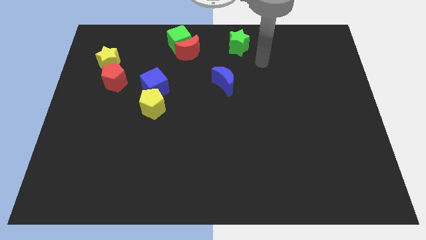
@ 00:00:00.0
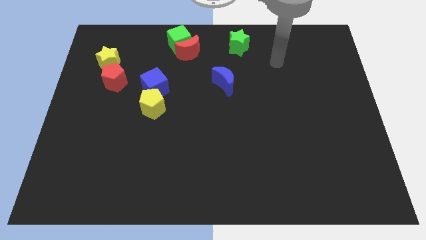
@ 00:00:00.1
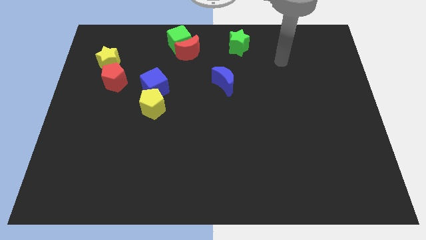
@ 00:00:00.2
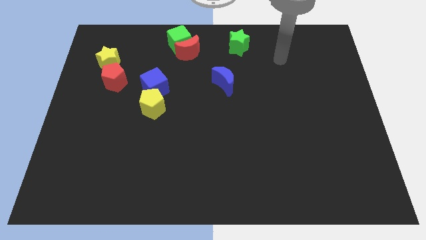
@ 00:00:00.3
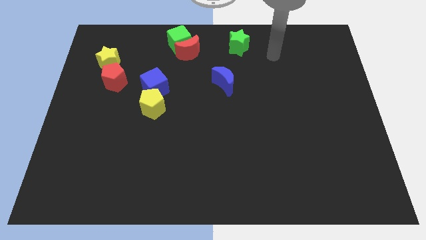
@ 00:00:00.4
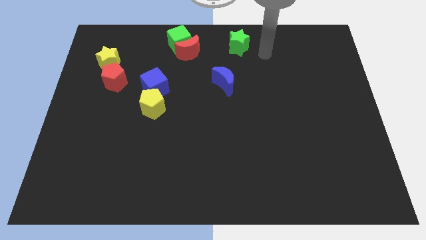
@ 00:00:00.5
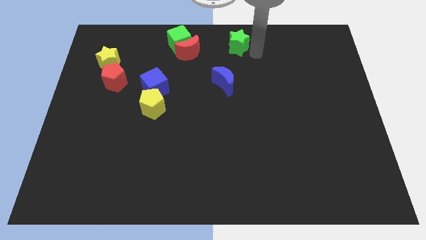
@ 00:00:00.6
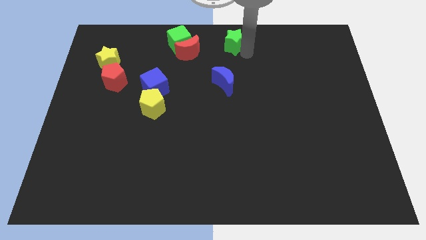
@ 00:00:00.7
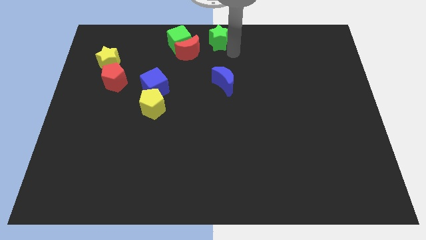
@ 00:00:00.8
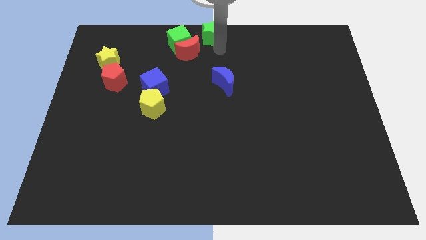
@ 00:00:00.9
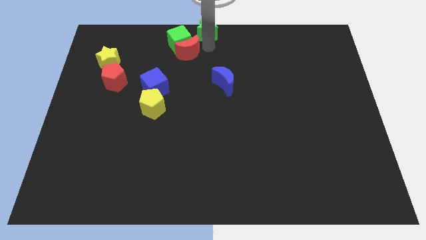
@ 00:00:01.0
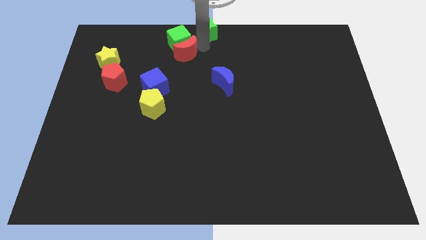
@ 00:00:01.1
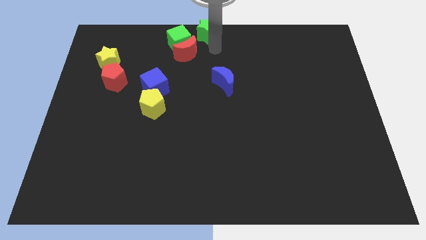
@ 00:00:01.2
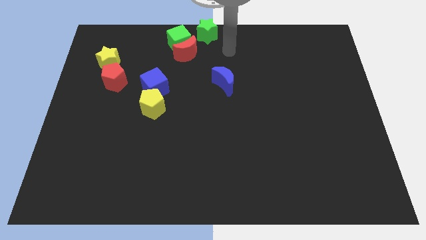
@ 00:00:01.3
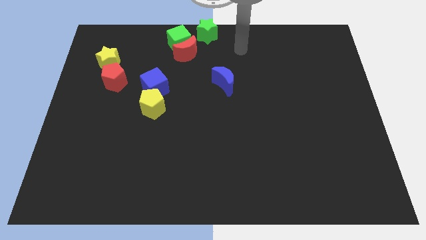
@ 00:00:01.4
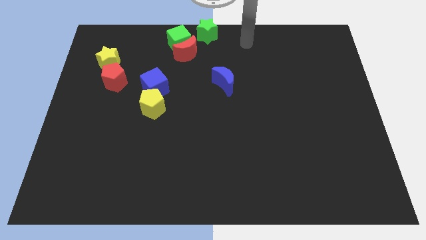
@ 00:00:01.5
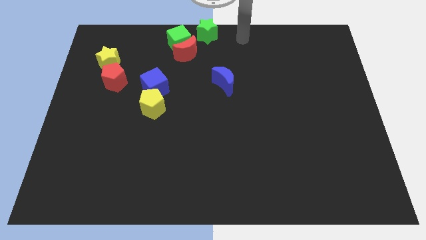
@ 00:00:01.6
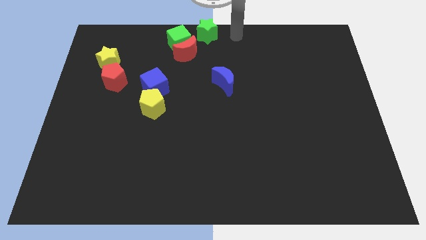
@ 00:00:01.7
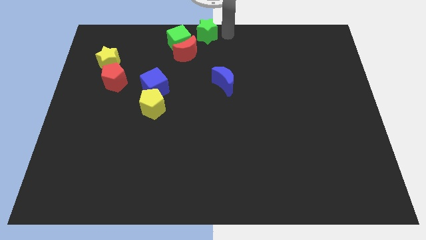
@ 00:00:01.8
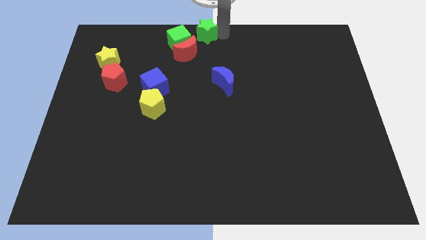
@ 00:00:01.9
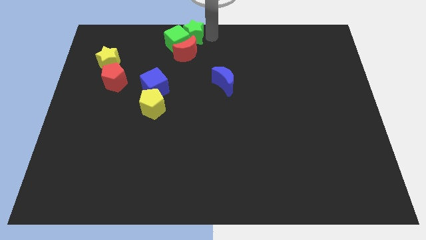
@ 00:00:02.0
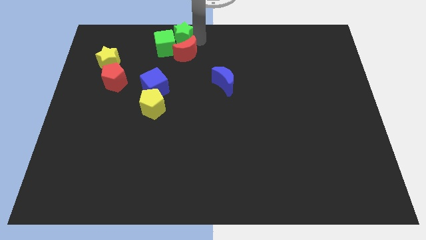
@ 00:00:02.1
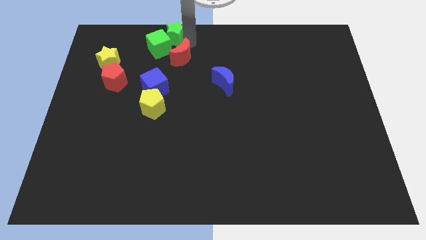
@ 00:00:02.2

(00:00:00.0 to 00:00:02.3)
move the green star into the green cube

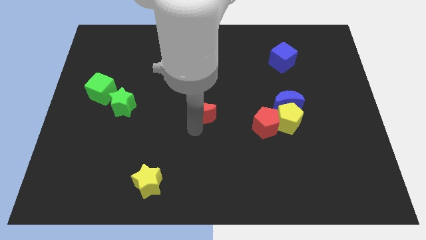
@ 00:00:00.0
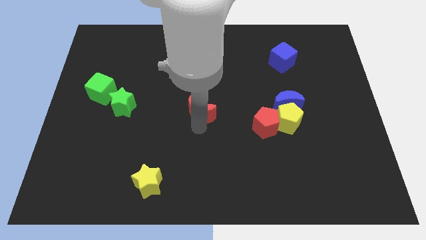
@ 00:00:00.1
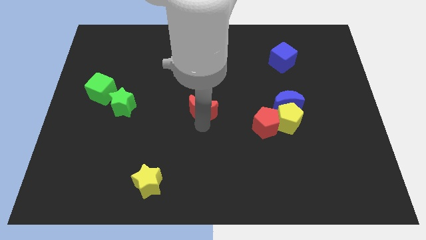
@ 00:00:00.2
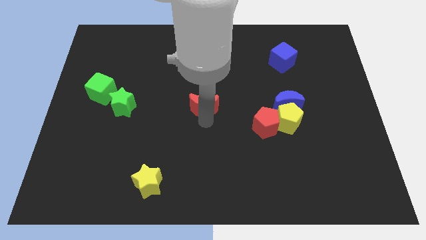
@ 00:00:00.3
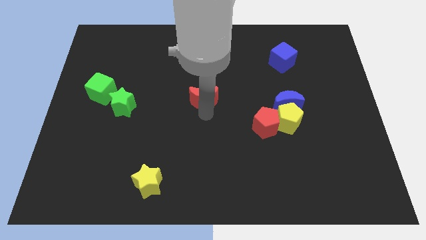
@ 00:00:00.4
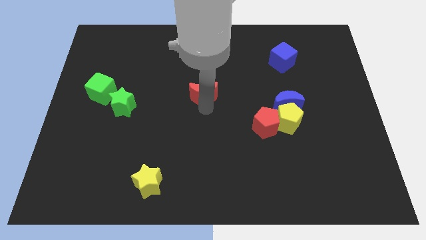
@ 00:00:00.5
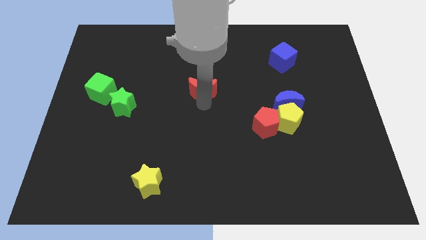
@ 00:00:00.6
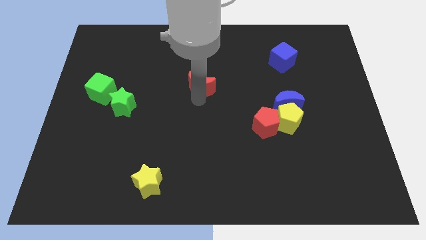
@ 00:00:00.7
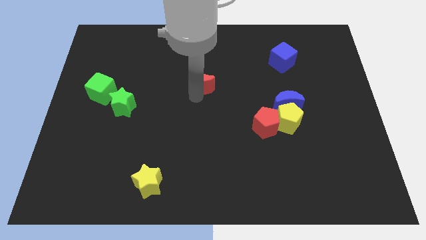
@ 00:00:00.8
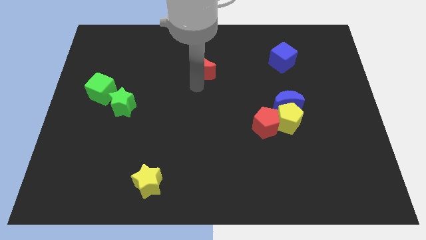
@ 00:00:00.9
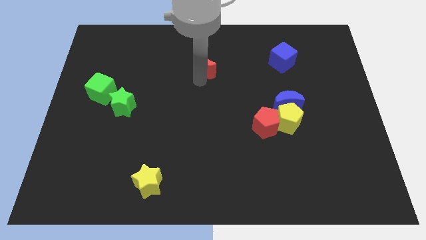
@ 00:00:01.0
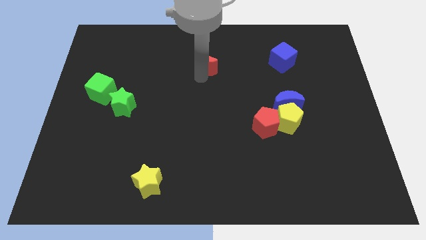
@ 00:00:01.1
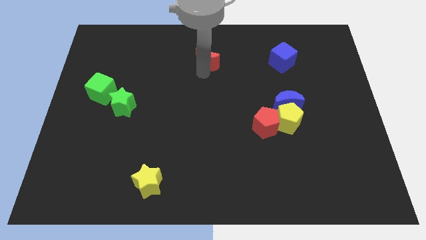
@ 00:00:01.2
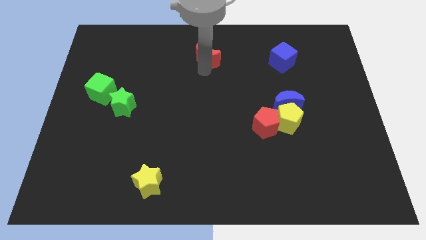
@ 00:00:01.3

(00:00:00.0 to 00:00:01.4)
move the red crescent horizontally to the left of the blue cube

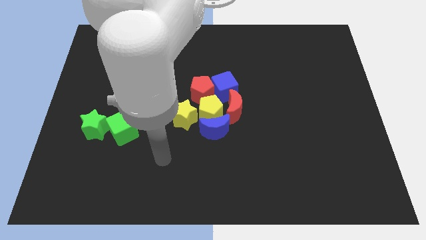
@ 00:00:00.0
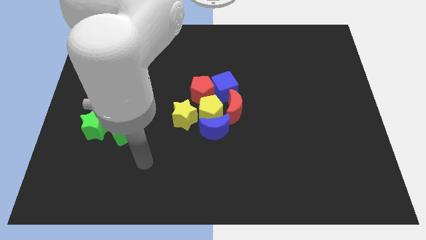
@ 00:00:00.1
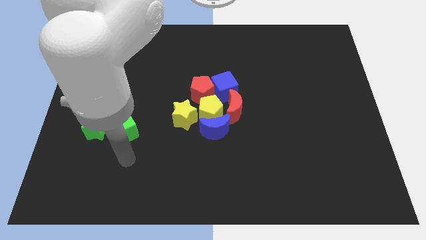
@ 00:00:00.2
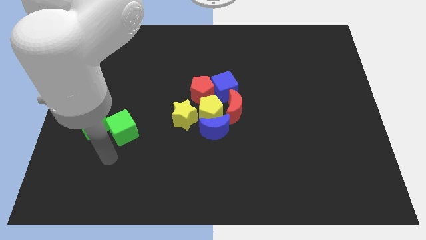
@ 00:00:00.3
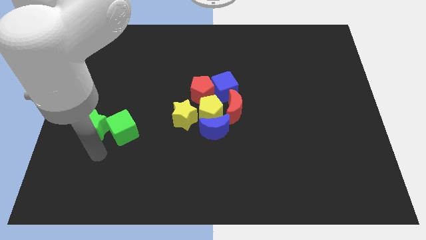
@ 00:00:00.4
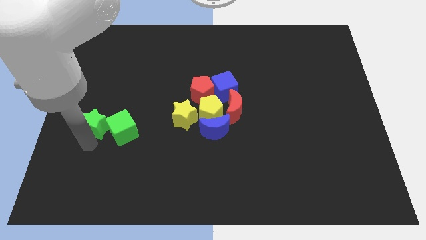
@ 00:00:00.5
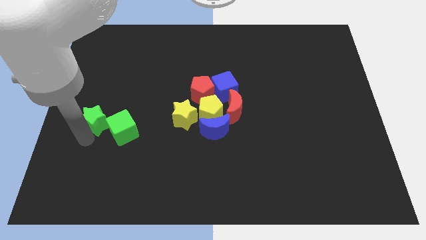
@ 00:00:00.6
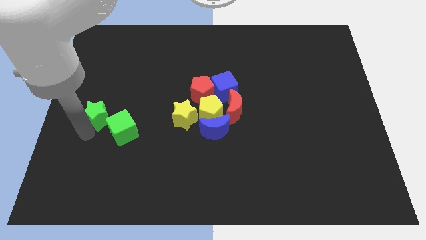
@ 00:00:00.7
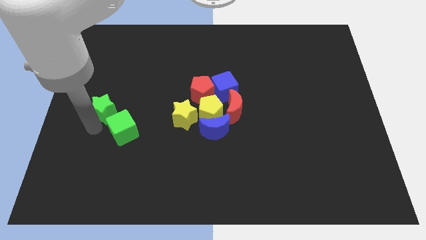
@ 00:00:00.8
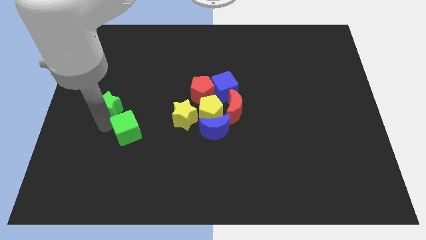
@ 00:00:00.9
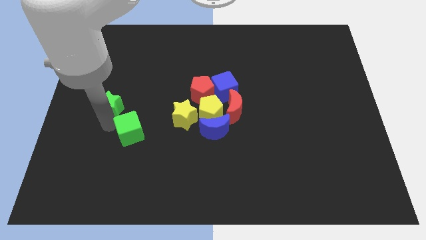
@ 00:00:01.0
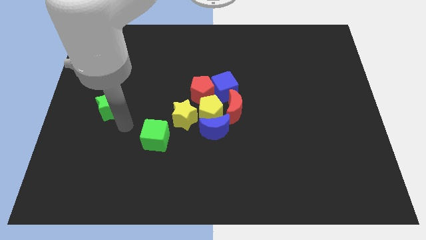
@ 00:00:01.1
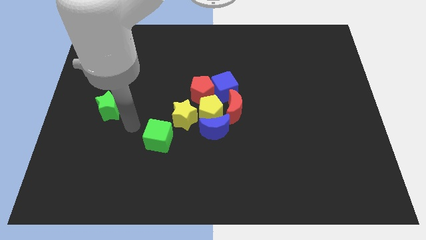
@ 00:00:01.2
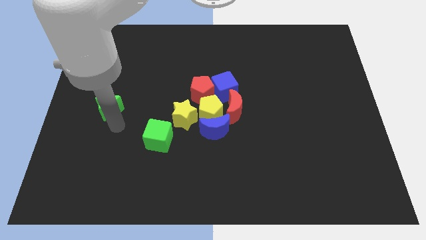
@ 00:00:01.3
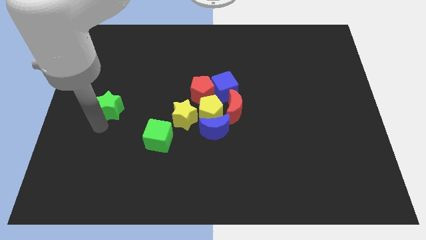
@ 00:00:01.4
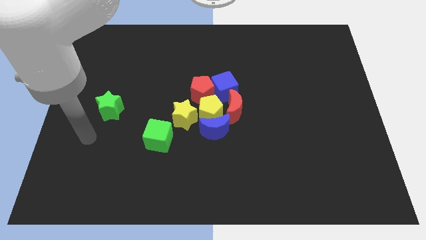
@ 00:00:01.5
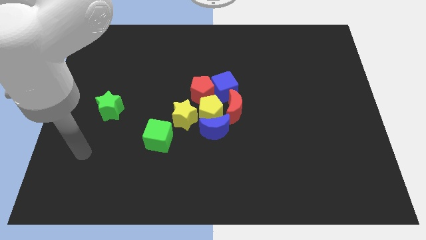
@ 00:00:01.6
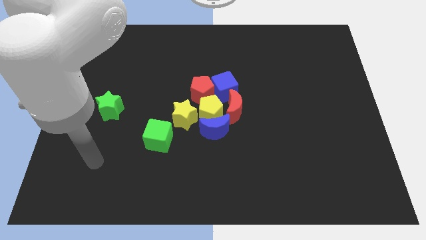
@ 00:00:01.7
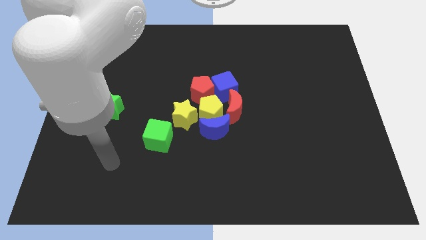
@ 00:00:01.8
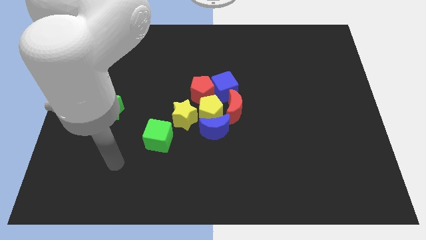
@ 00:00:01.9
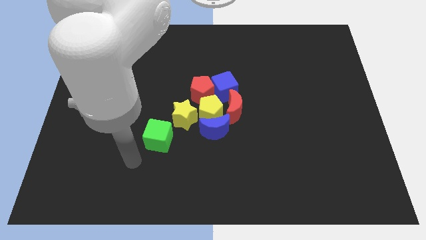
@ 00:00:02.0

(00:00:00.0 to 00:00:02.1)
push the green cube towards the yellow star

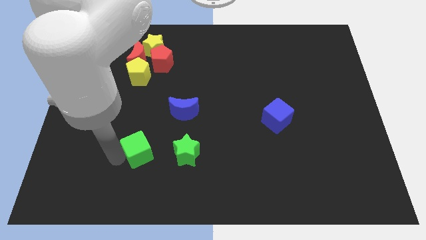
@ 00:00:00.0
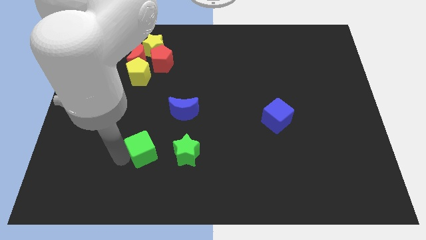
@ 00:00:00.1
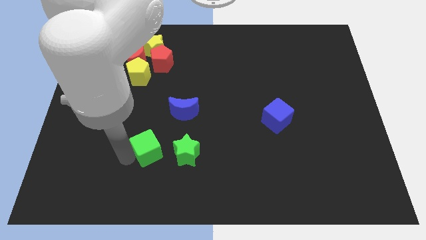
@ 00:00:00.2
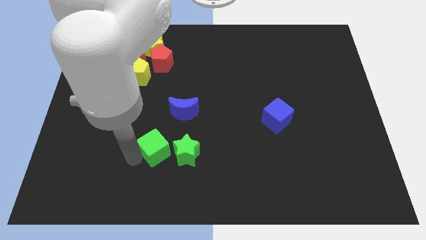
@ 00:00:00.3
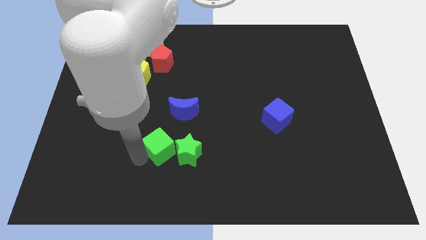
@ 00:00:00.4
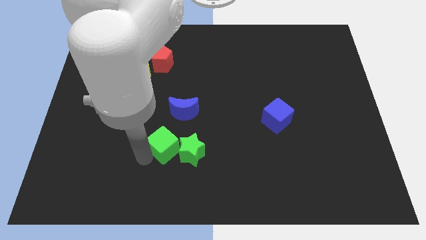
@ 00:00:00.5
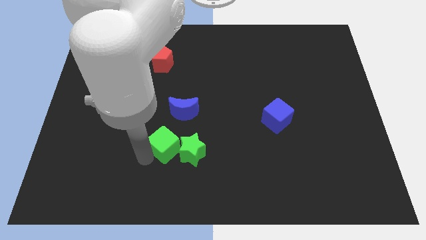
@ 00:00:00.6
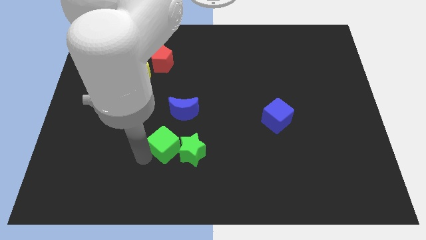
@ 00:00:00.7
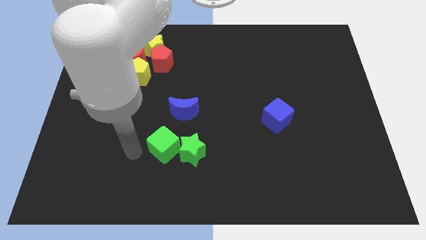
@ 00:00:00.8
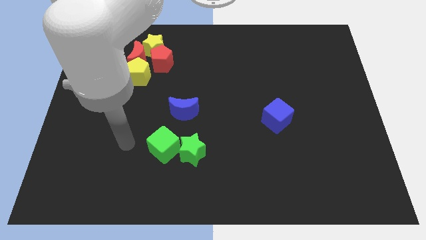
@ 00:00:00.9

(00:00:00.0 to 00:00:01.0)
move the green cube to the left of the green star

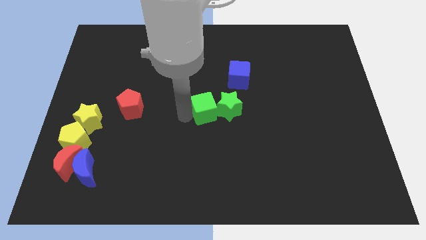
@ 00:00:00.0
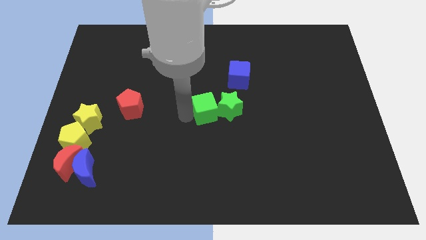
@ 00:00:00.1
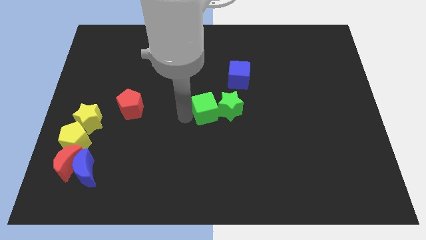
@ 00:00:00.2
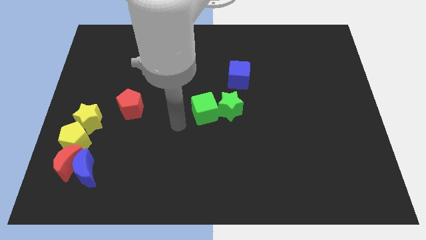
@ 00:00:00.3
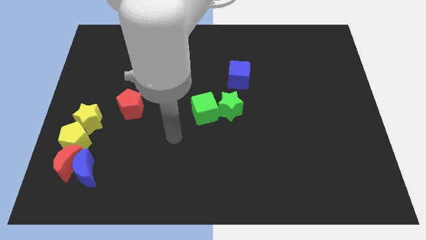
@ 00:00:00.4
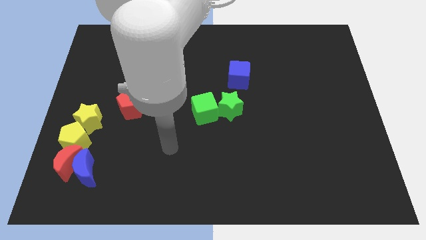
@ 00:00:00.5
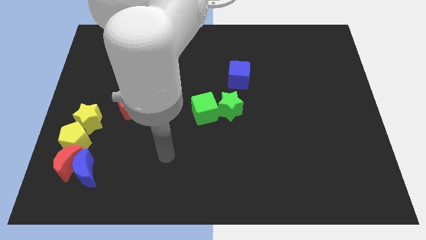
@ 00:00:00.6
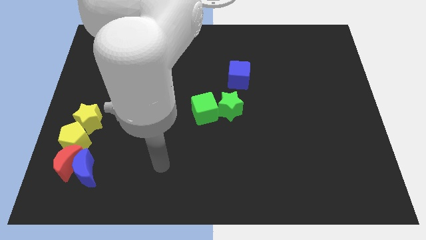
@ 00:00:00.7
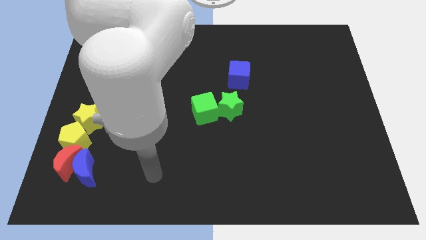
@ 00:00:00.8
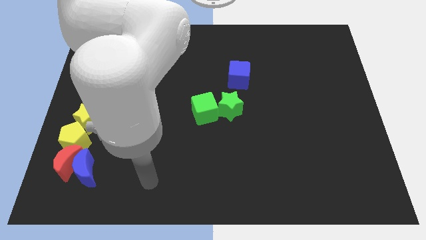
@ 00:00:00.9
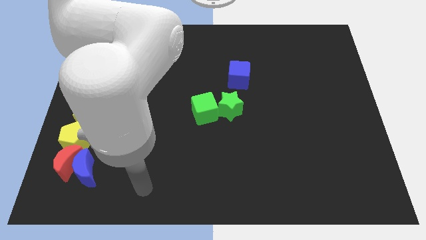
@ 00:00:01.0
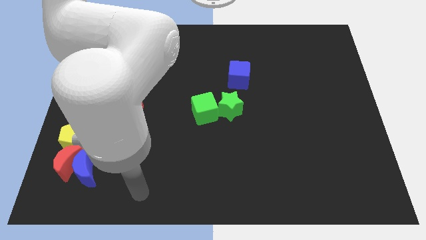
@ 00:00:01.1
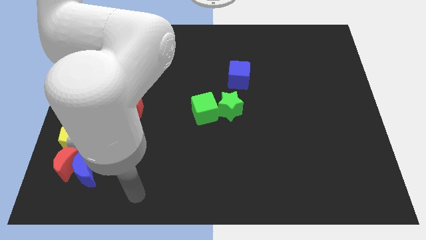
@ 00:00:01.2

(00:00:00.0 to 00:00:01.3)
push the green cube into the green star

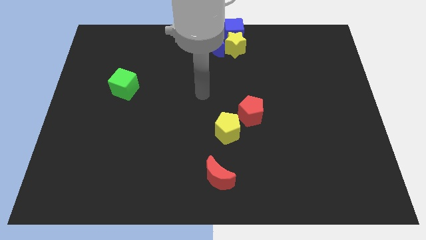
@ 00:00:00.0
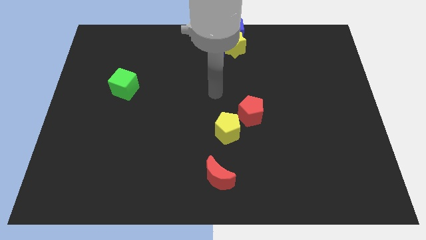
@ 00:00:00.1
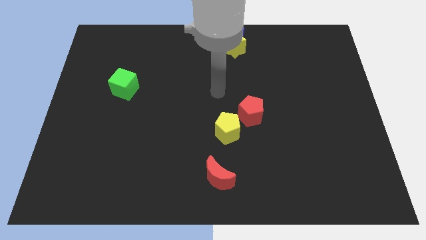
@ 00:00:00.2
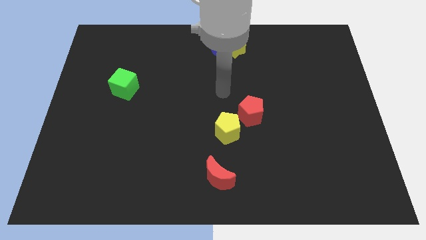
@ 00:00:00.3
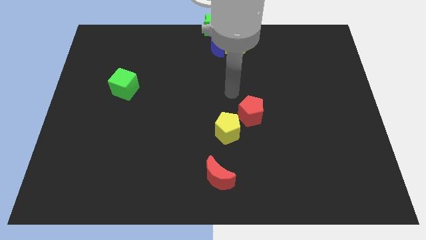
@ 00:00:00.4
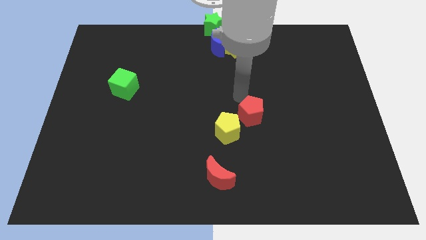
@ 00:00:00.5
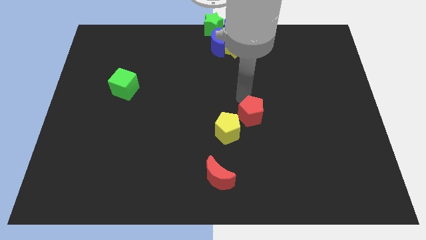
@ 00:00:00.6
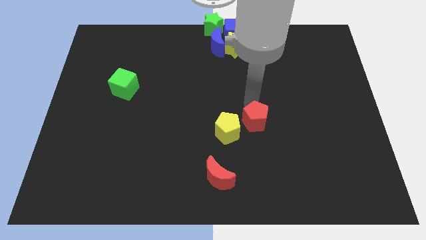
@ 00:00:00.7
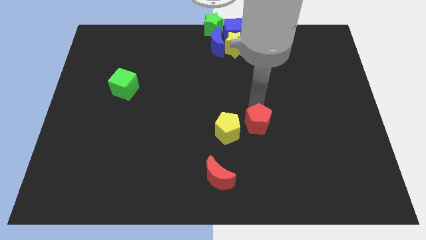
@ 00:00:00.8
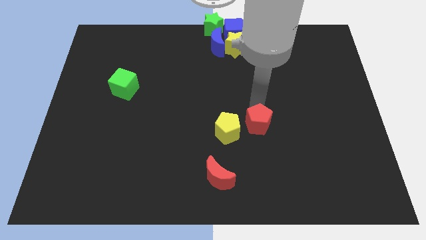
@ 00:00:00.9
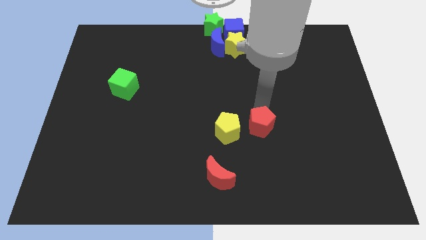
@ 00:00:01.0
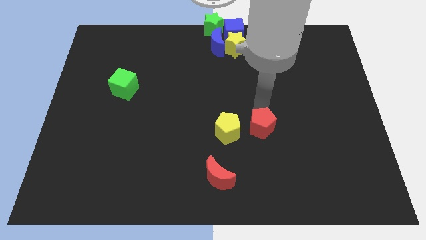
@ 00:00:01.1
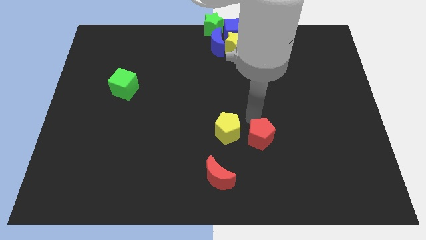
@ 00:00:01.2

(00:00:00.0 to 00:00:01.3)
move the red pentagon to the right of the yellow pentagon
